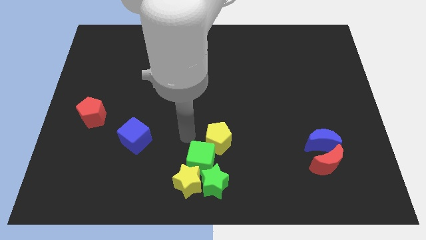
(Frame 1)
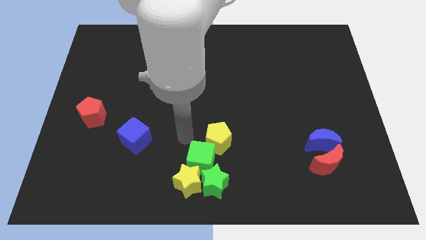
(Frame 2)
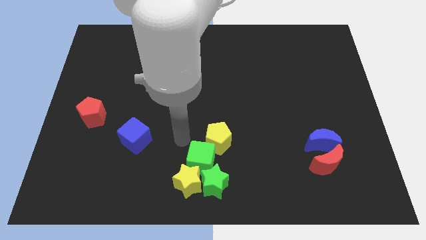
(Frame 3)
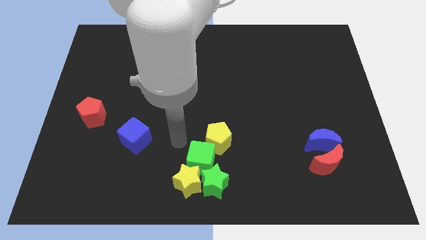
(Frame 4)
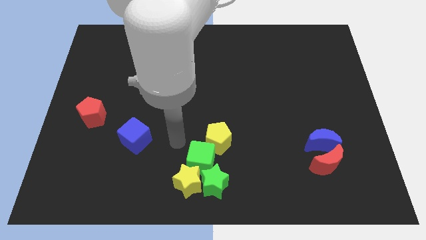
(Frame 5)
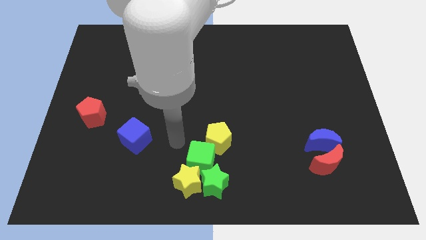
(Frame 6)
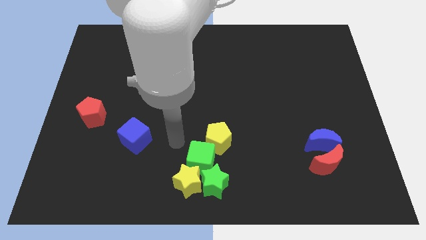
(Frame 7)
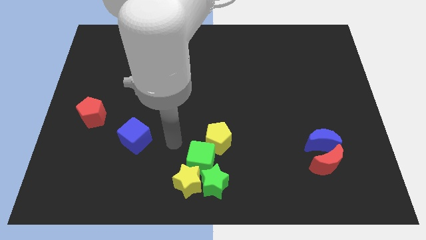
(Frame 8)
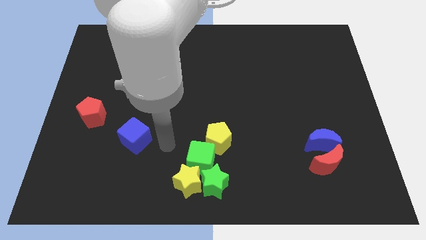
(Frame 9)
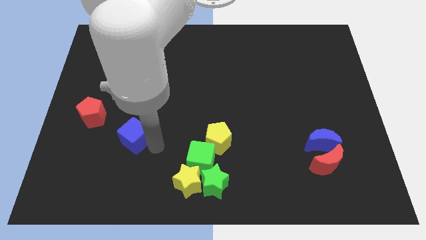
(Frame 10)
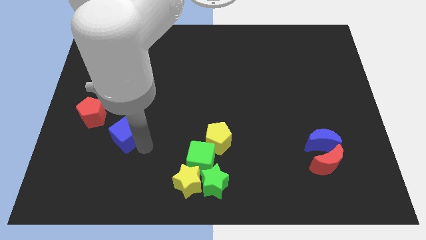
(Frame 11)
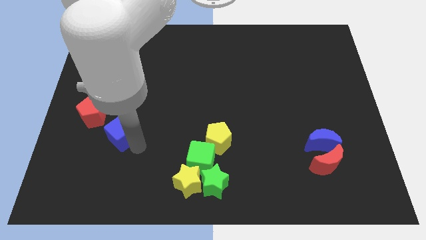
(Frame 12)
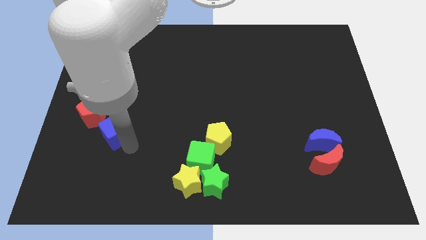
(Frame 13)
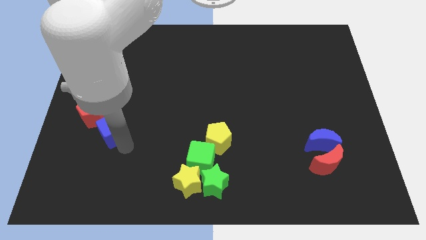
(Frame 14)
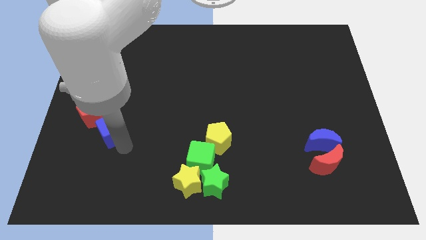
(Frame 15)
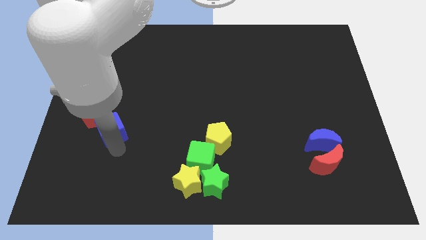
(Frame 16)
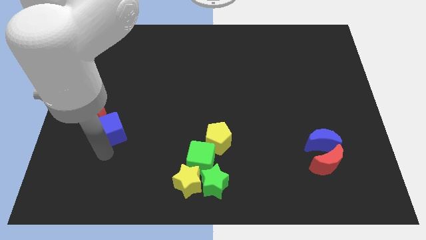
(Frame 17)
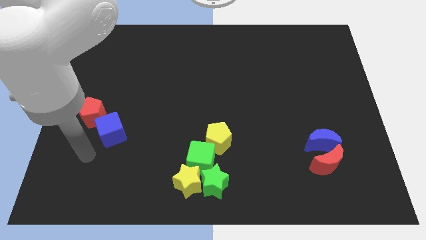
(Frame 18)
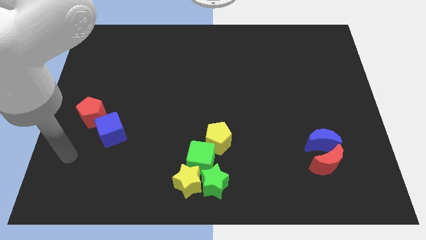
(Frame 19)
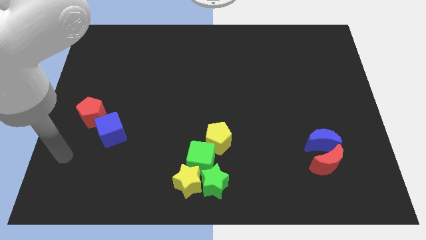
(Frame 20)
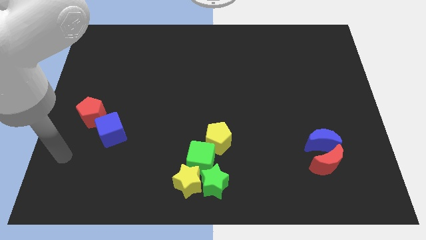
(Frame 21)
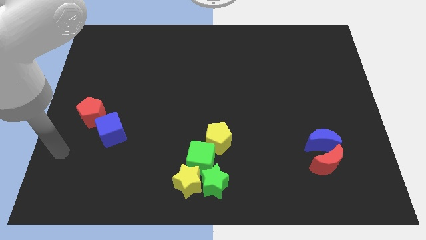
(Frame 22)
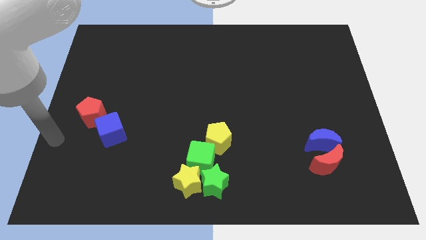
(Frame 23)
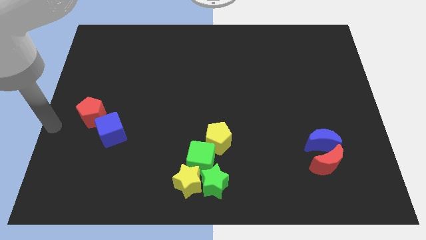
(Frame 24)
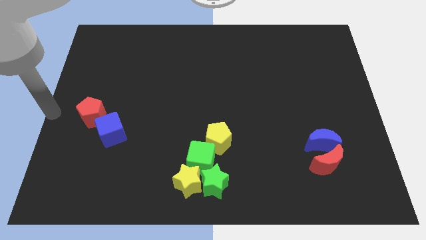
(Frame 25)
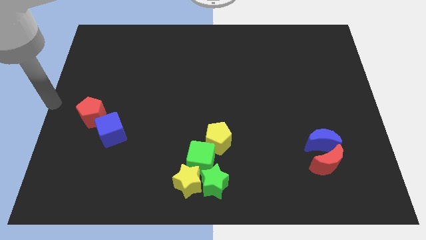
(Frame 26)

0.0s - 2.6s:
place the blue cube at the bottom right side of red pentagon

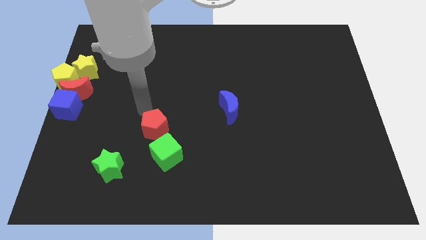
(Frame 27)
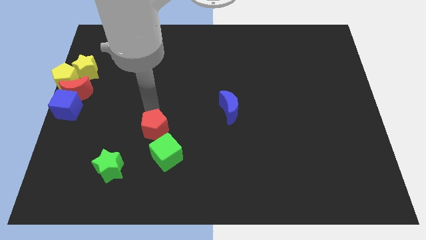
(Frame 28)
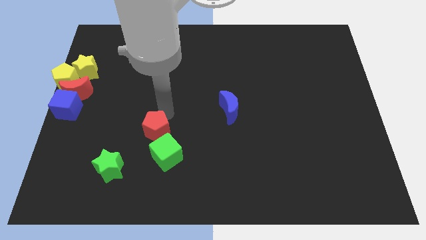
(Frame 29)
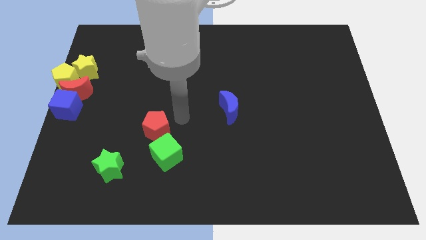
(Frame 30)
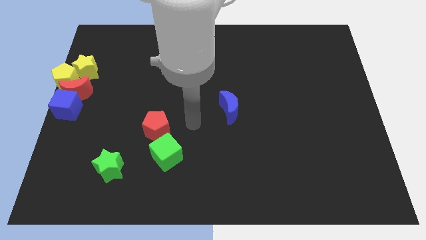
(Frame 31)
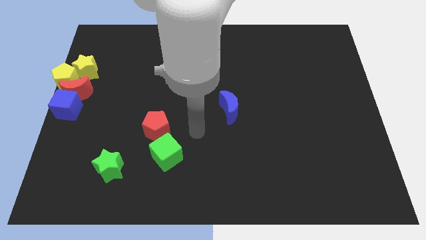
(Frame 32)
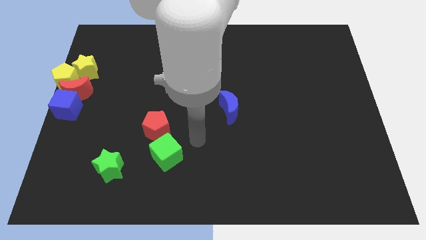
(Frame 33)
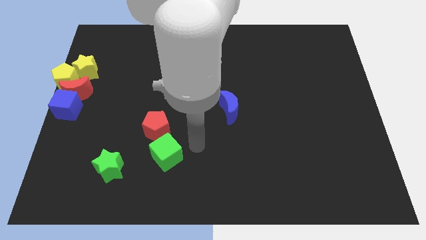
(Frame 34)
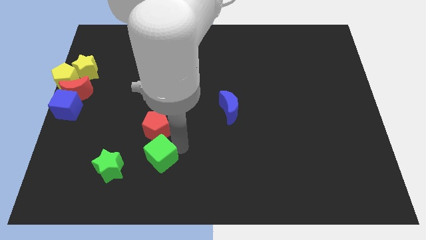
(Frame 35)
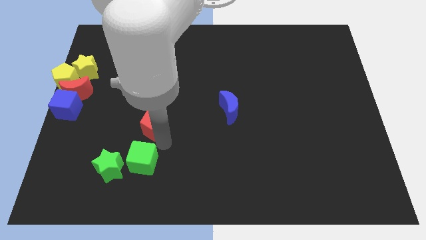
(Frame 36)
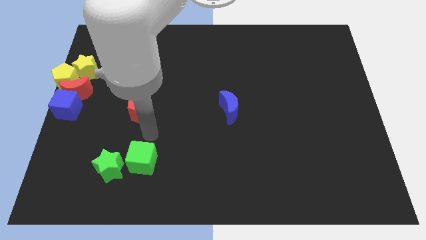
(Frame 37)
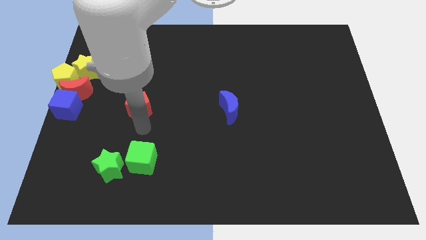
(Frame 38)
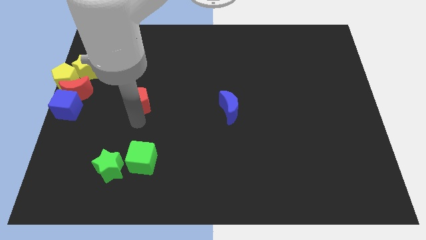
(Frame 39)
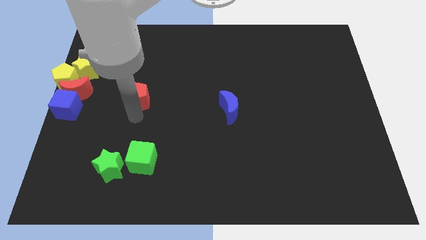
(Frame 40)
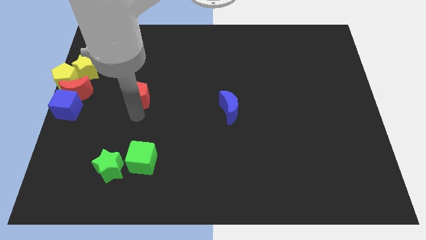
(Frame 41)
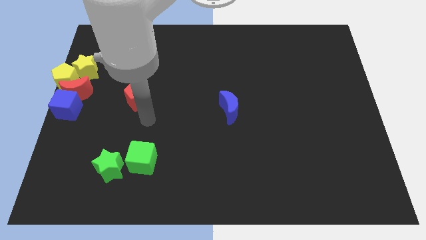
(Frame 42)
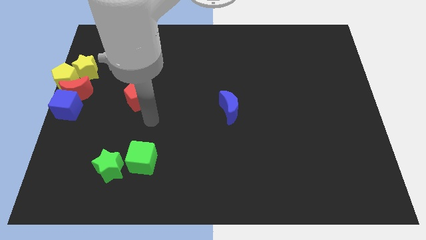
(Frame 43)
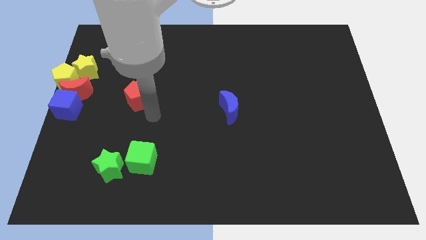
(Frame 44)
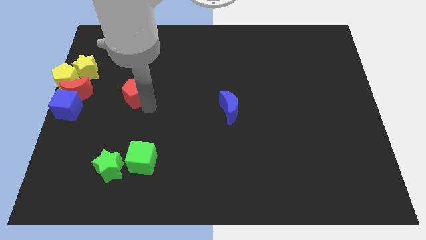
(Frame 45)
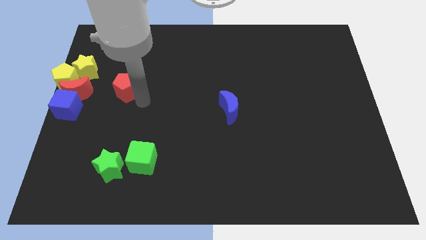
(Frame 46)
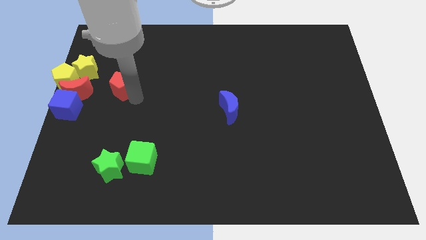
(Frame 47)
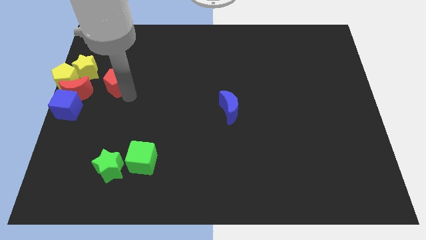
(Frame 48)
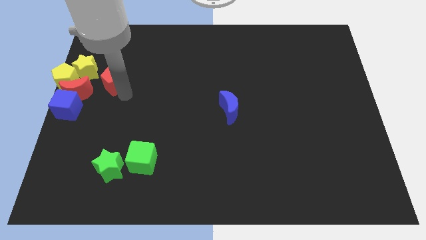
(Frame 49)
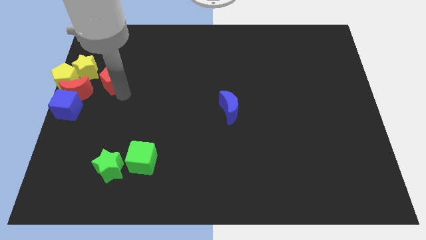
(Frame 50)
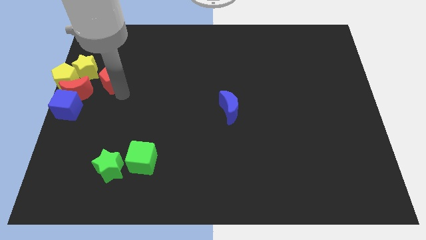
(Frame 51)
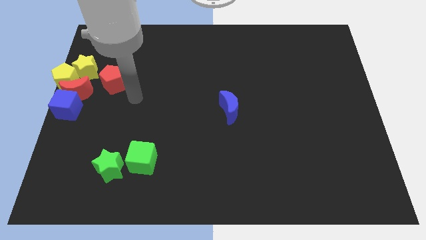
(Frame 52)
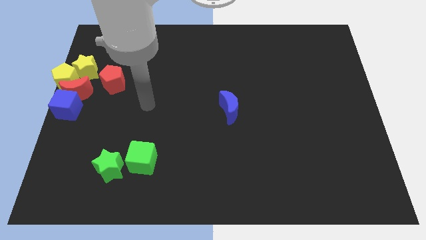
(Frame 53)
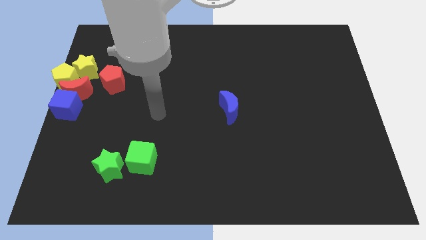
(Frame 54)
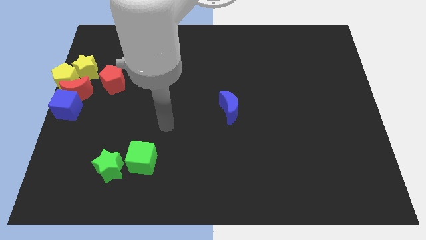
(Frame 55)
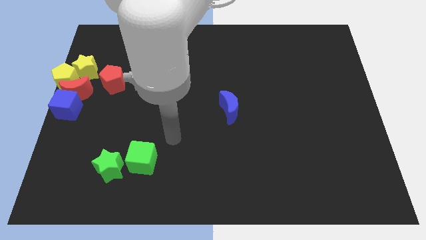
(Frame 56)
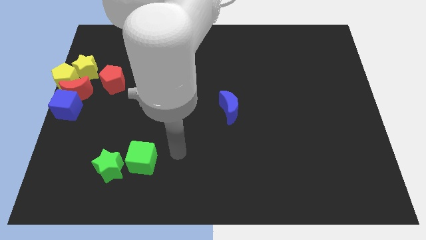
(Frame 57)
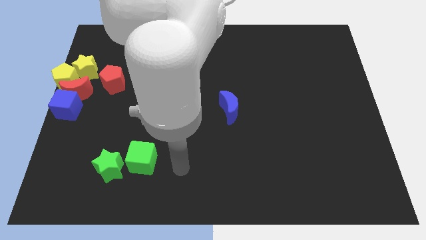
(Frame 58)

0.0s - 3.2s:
move the red pentagon to the bottom right side of the yellow star

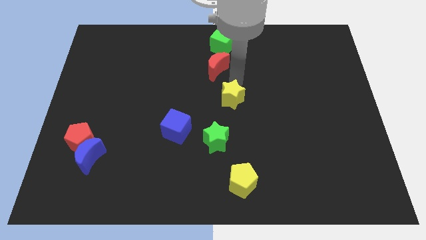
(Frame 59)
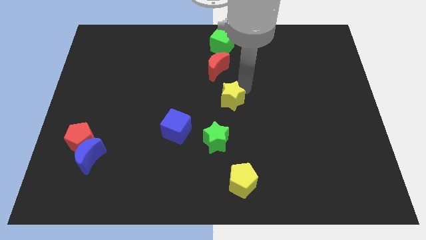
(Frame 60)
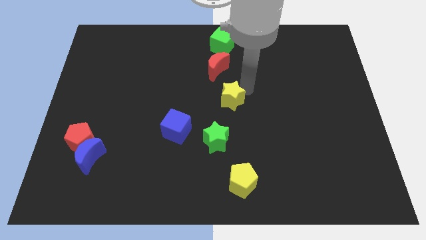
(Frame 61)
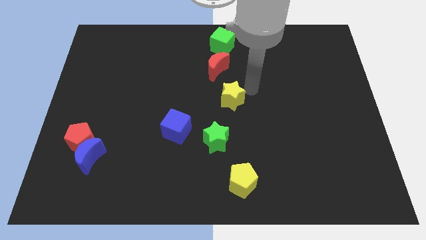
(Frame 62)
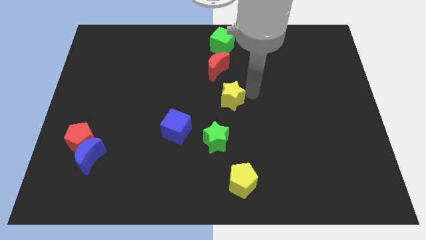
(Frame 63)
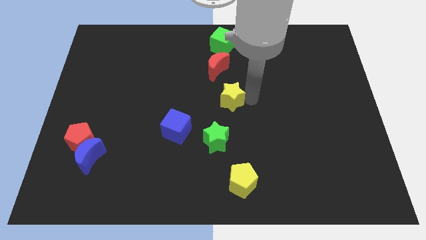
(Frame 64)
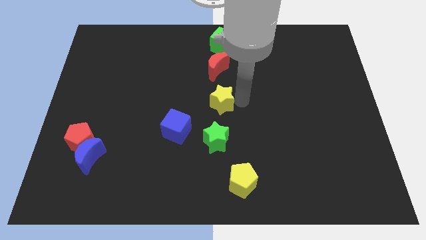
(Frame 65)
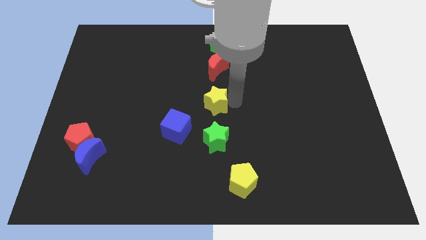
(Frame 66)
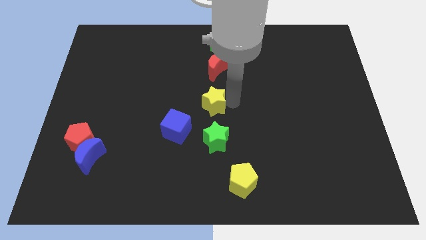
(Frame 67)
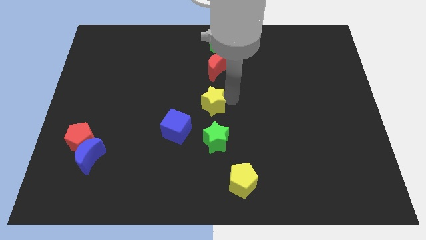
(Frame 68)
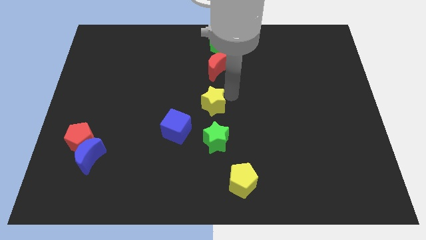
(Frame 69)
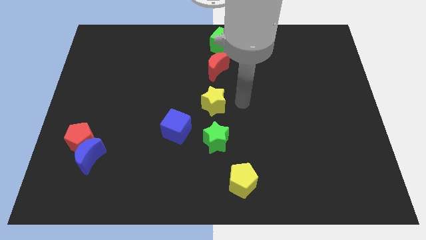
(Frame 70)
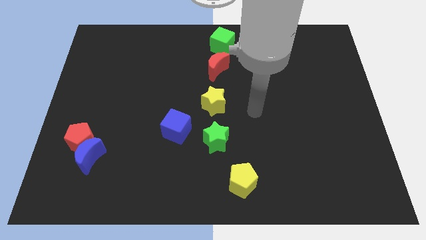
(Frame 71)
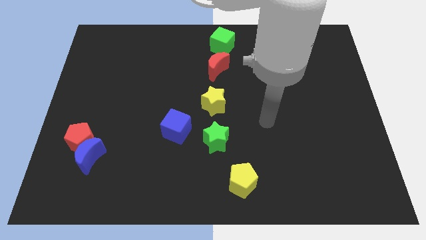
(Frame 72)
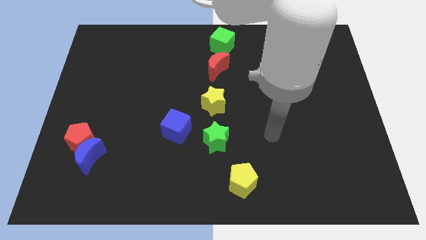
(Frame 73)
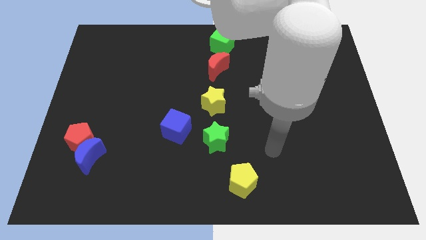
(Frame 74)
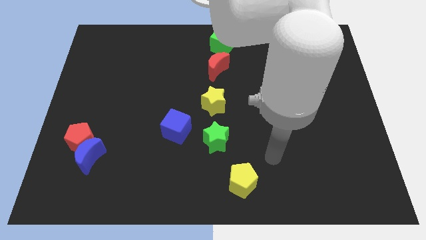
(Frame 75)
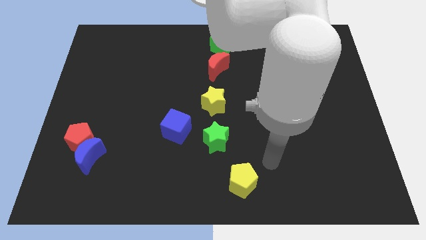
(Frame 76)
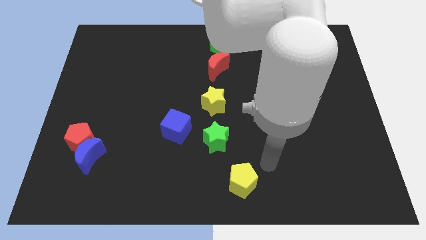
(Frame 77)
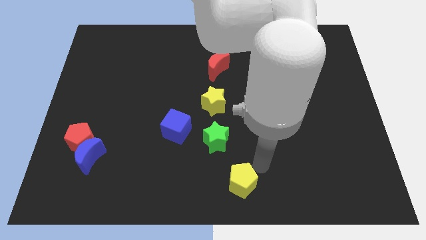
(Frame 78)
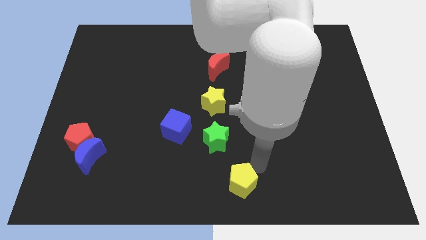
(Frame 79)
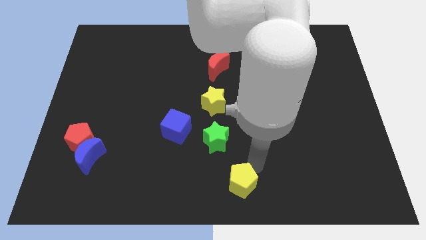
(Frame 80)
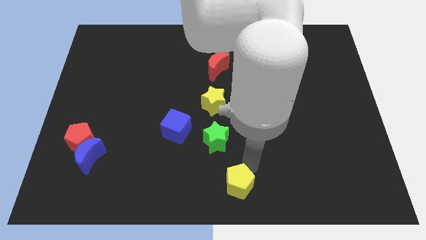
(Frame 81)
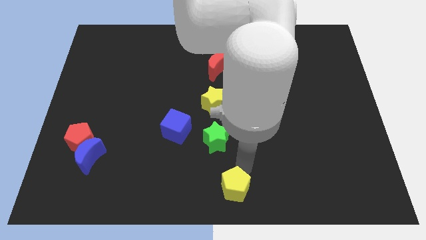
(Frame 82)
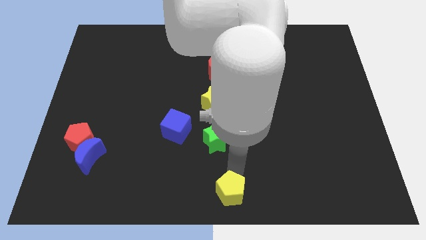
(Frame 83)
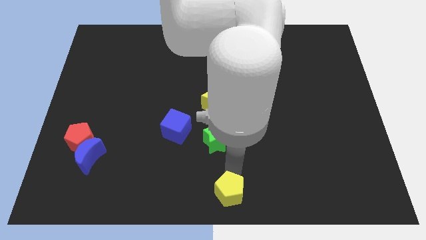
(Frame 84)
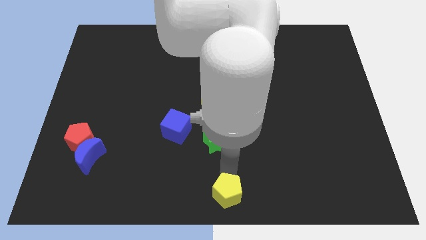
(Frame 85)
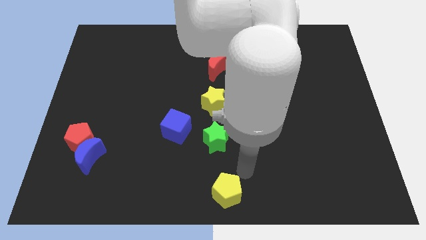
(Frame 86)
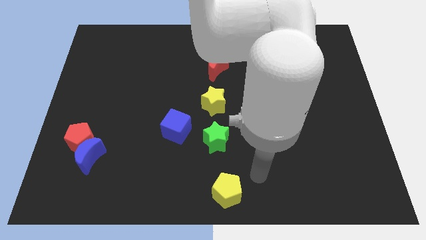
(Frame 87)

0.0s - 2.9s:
push yellow pentagon and yellow star slightly to the left

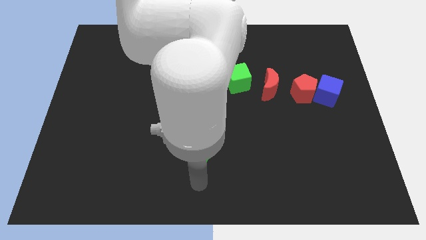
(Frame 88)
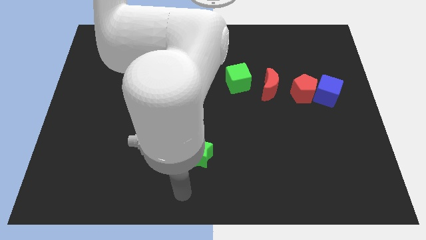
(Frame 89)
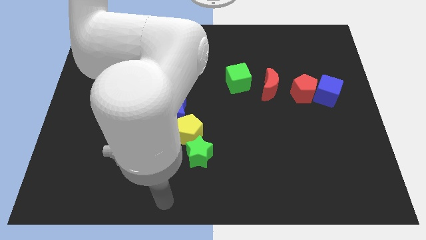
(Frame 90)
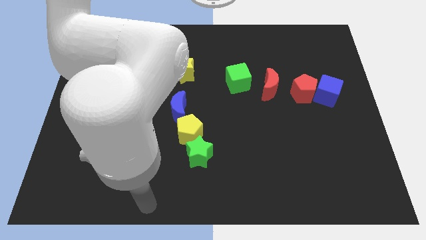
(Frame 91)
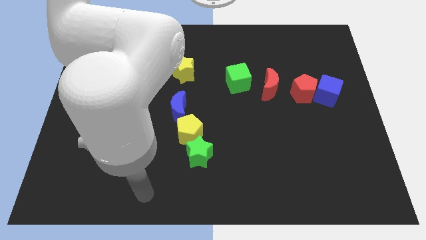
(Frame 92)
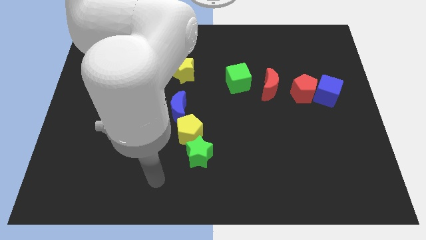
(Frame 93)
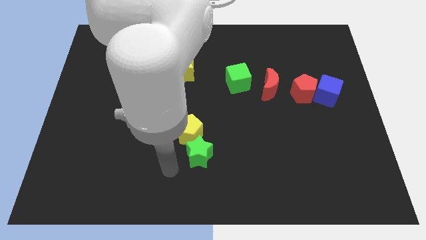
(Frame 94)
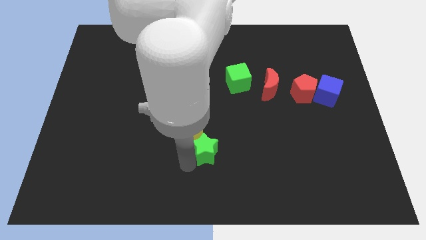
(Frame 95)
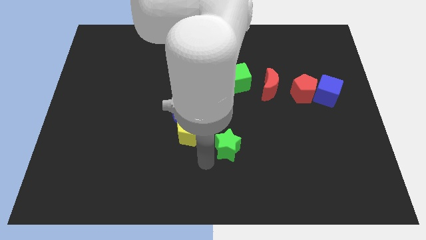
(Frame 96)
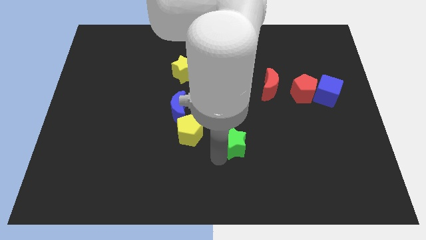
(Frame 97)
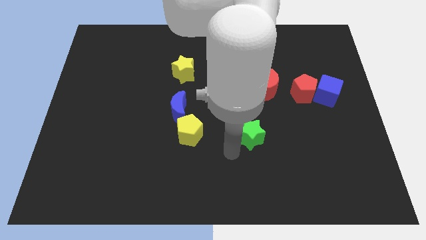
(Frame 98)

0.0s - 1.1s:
move the green start away from the yellow pentagon
